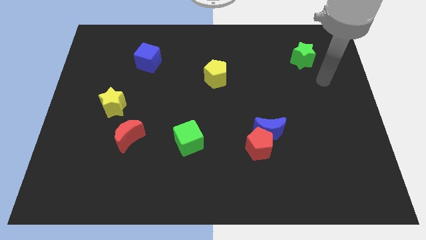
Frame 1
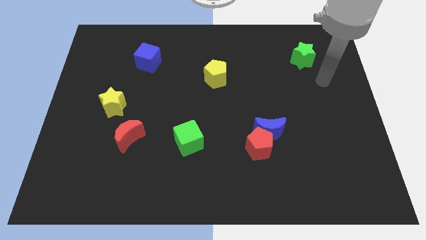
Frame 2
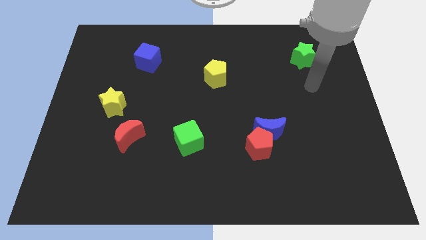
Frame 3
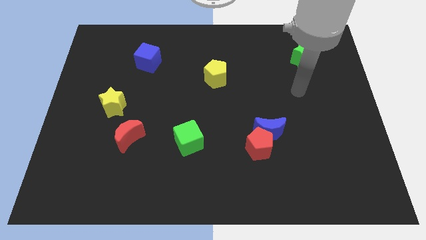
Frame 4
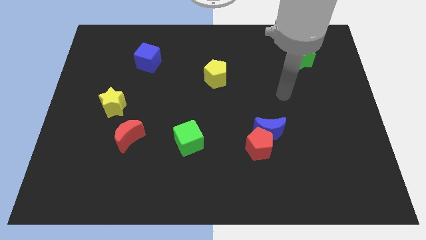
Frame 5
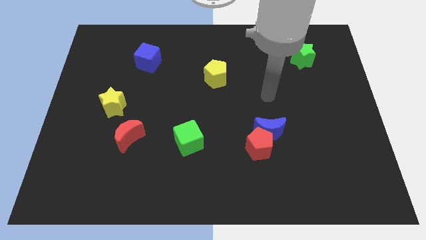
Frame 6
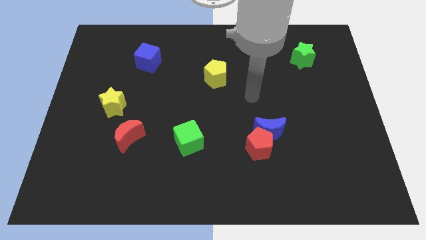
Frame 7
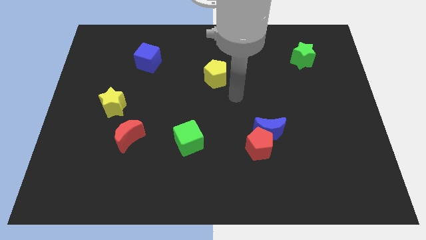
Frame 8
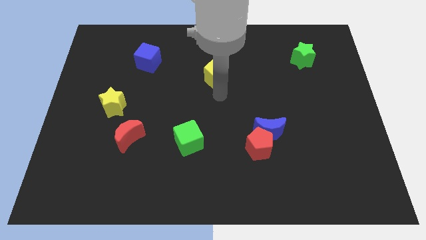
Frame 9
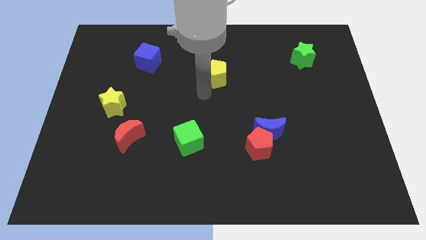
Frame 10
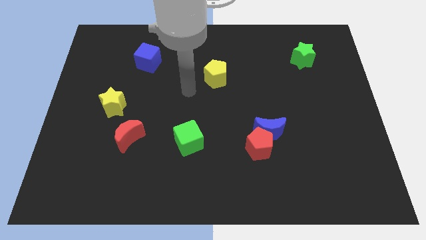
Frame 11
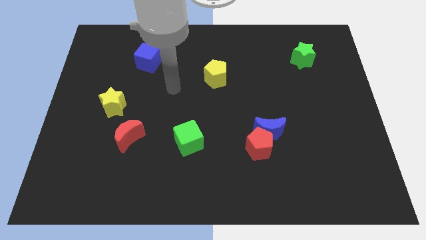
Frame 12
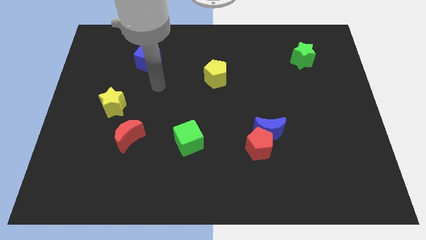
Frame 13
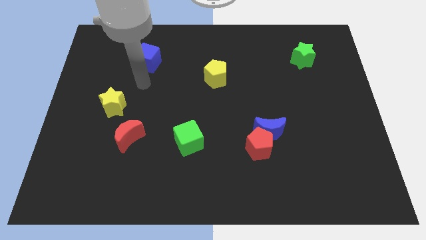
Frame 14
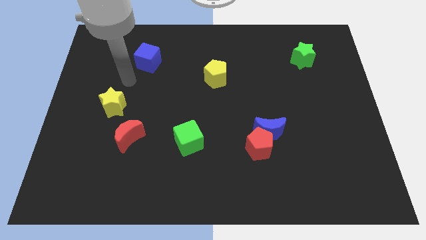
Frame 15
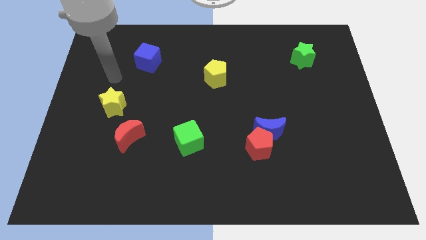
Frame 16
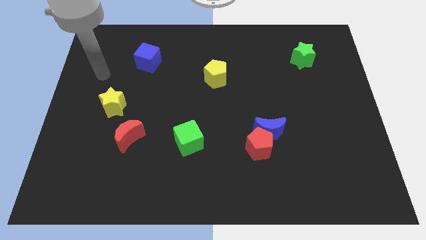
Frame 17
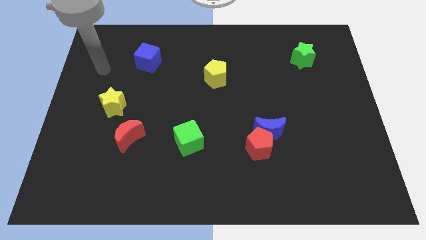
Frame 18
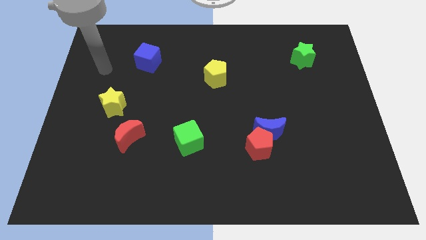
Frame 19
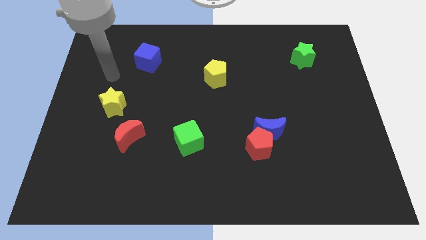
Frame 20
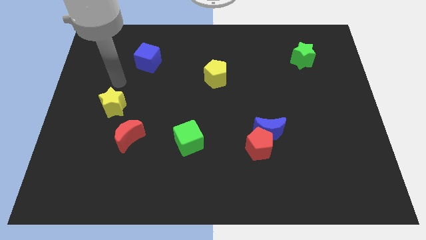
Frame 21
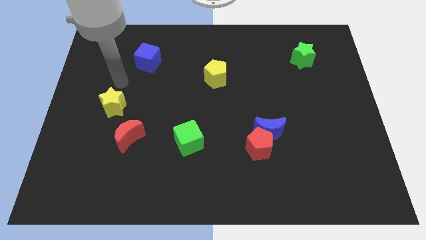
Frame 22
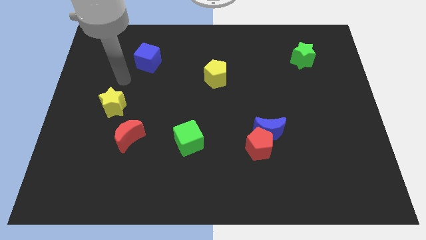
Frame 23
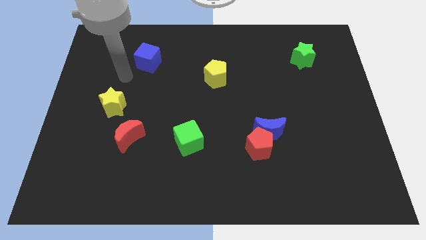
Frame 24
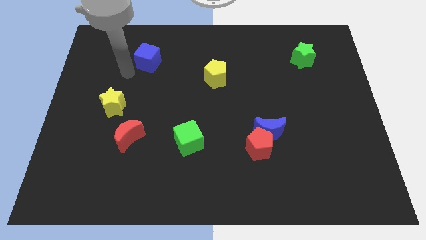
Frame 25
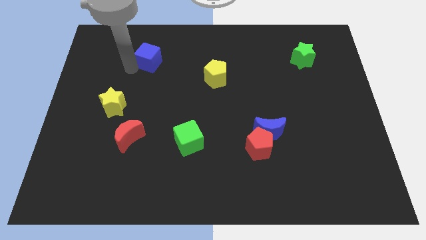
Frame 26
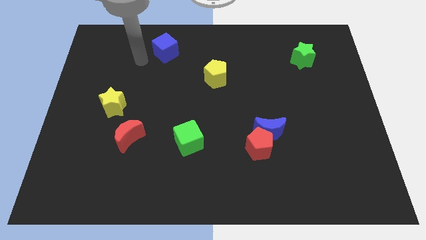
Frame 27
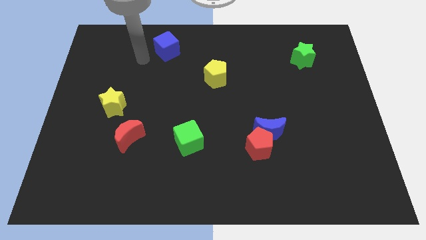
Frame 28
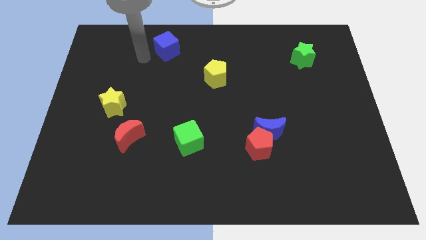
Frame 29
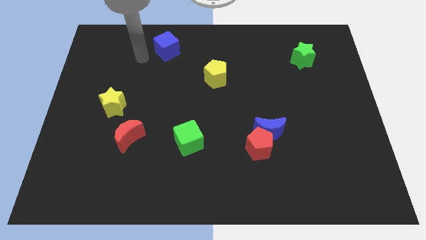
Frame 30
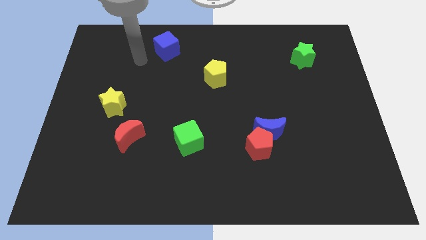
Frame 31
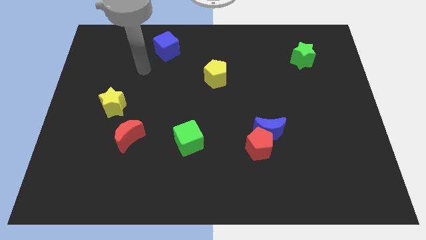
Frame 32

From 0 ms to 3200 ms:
push the blue cube towards the top side of the board

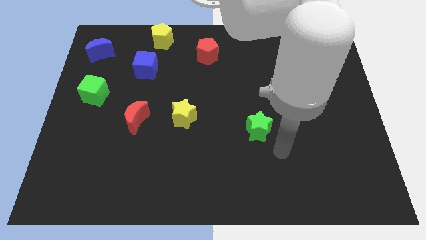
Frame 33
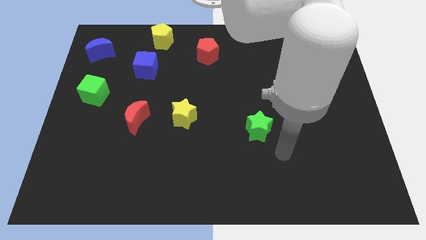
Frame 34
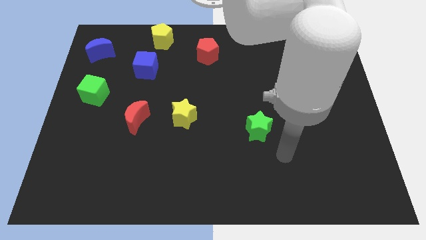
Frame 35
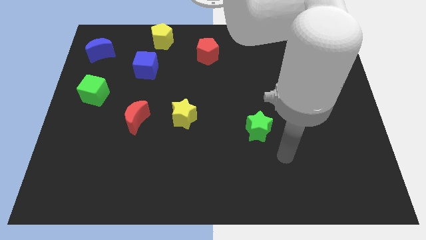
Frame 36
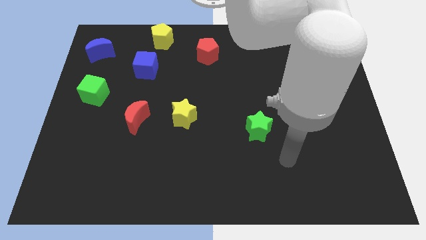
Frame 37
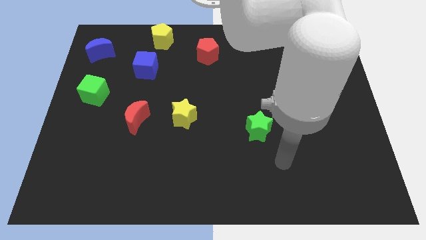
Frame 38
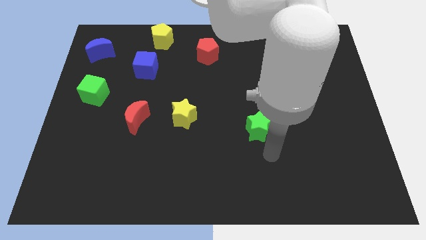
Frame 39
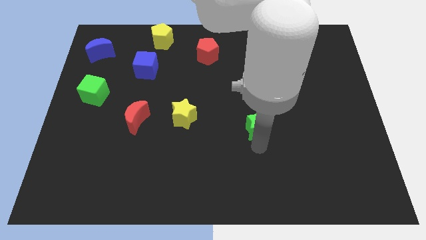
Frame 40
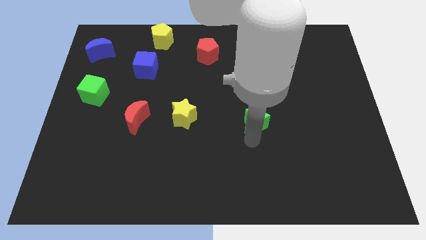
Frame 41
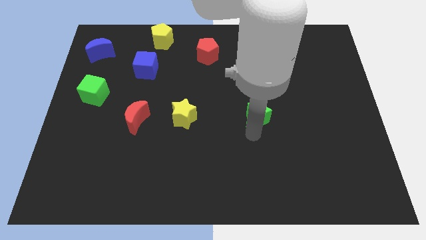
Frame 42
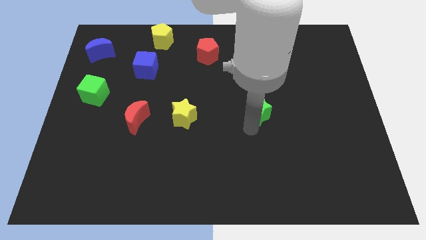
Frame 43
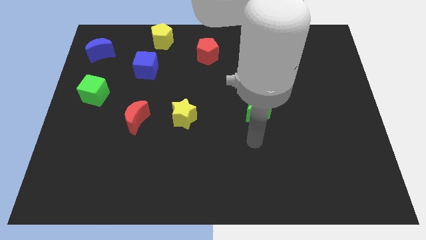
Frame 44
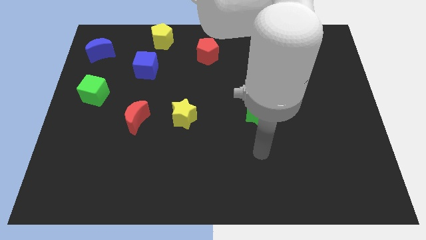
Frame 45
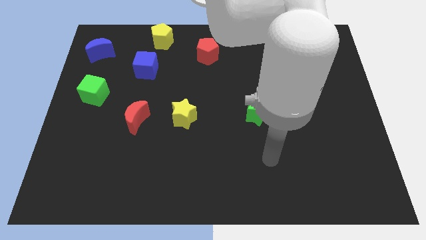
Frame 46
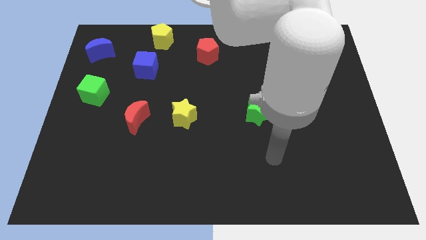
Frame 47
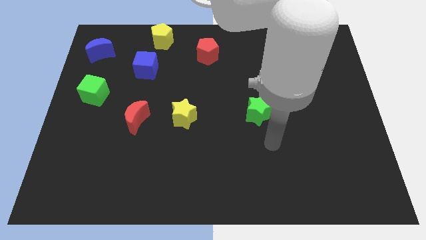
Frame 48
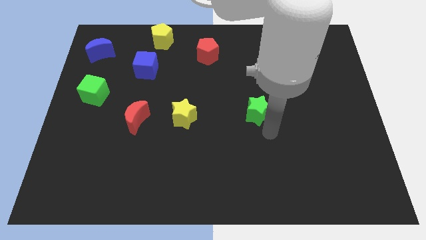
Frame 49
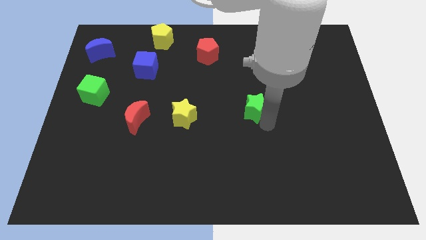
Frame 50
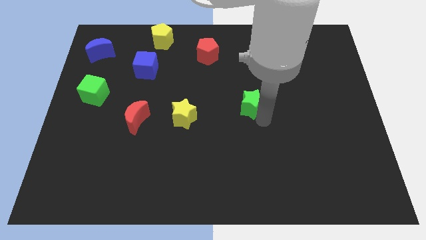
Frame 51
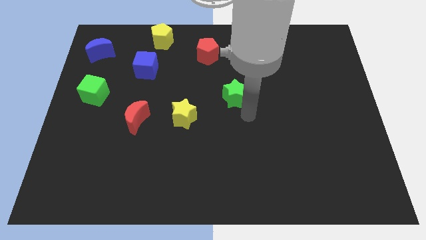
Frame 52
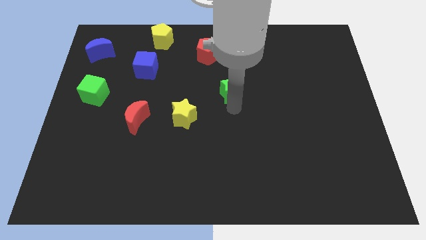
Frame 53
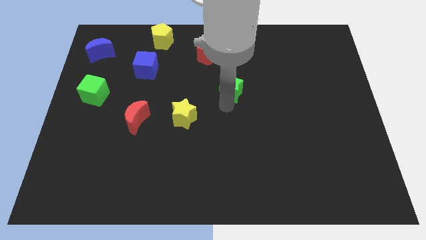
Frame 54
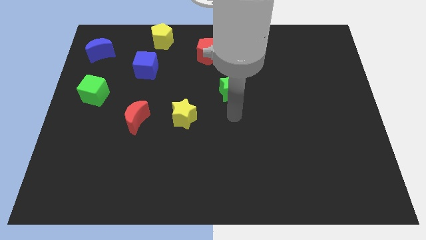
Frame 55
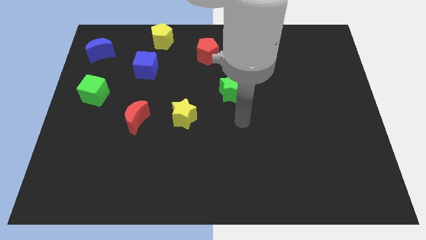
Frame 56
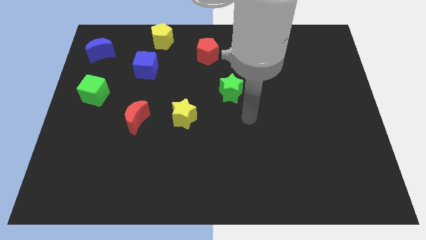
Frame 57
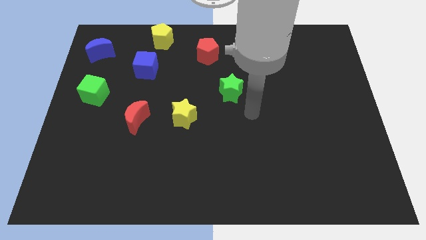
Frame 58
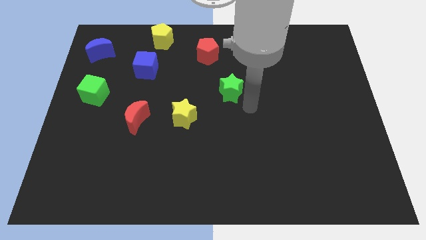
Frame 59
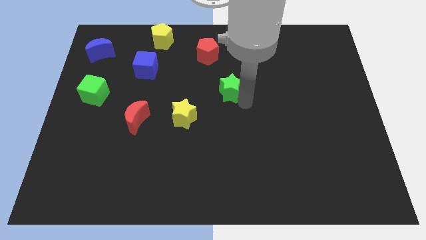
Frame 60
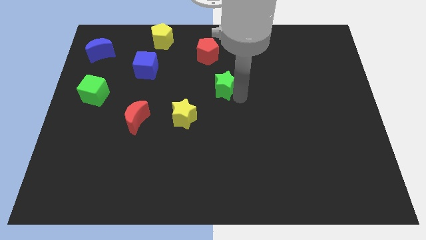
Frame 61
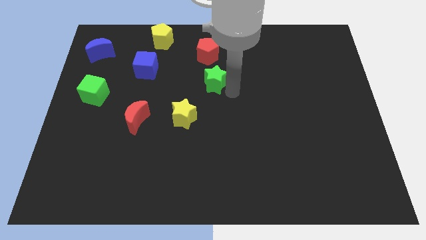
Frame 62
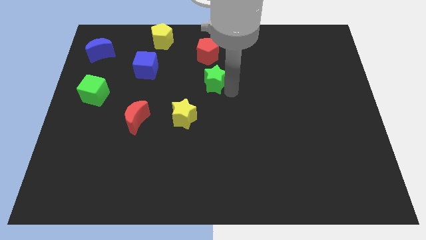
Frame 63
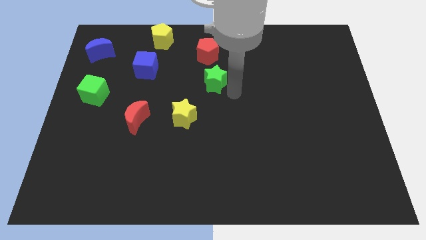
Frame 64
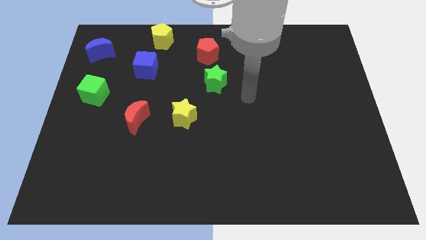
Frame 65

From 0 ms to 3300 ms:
place the green star bottom right to the red pentagon

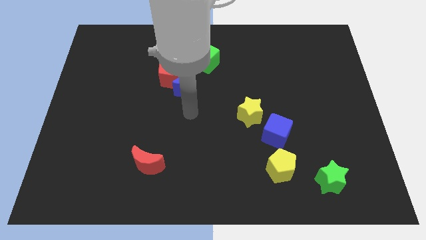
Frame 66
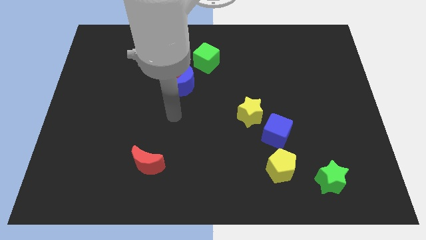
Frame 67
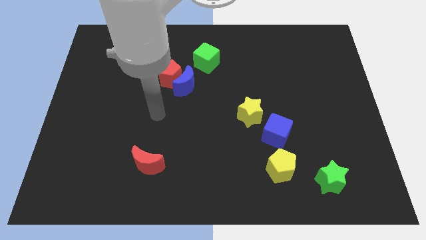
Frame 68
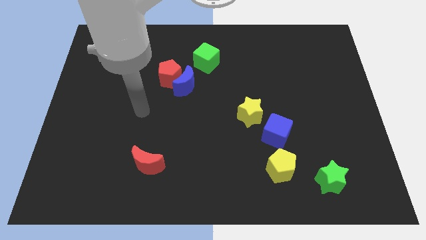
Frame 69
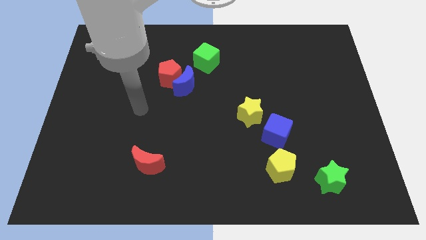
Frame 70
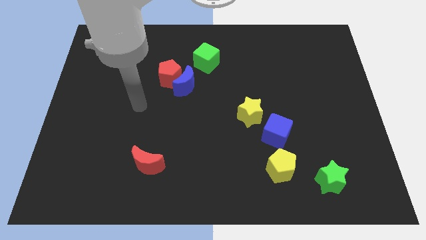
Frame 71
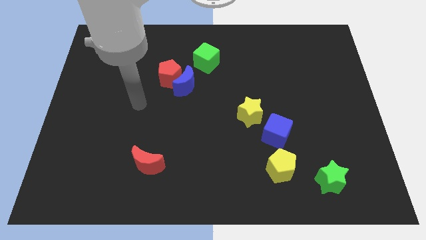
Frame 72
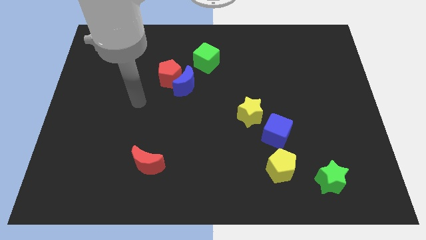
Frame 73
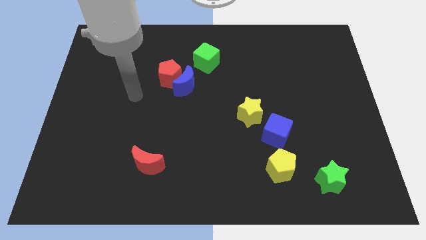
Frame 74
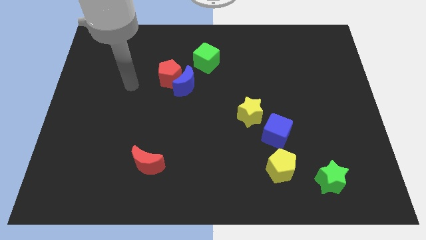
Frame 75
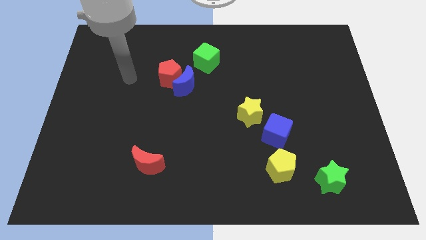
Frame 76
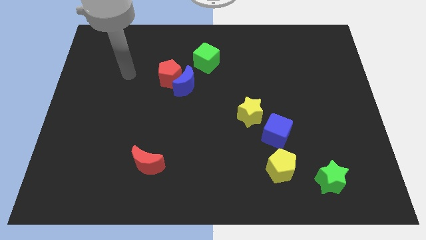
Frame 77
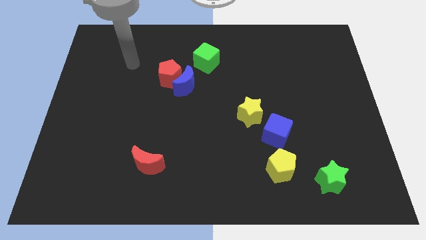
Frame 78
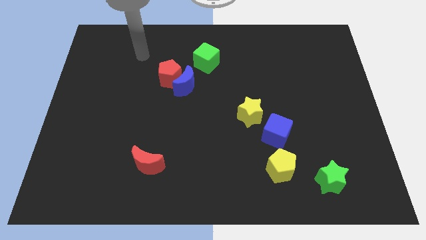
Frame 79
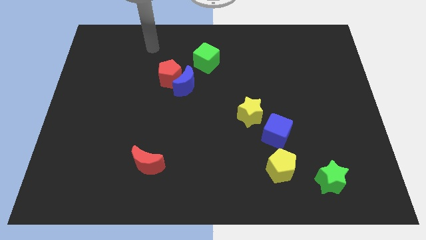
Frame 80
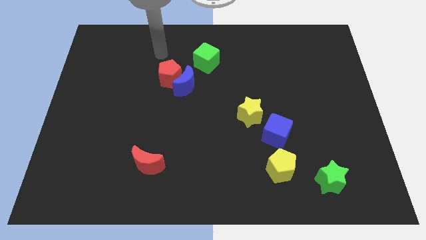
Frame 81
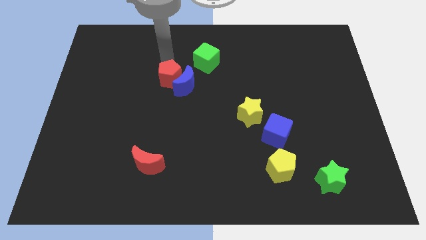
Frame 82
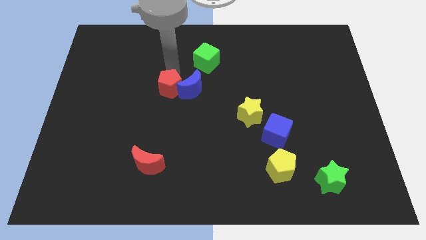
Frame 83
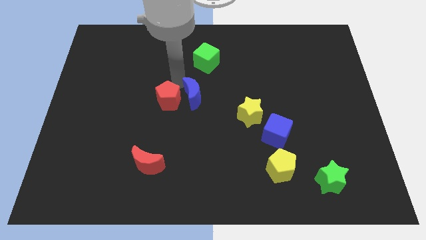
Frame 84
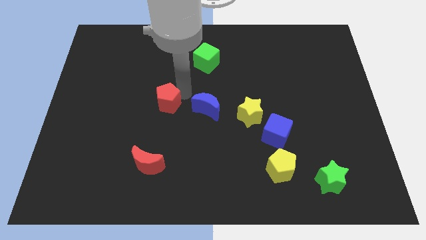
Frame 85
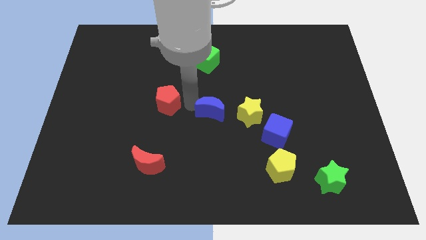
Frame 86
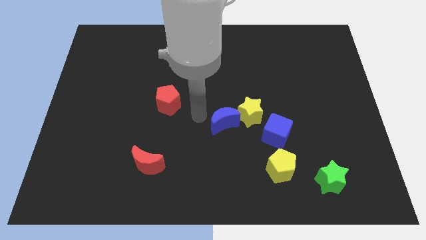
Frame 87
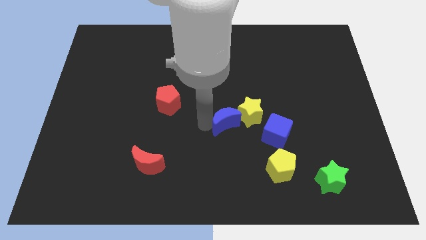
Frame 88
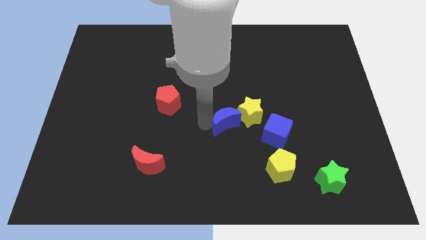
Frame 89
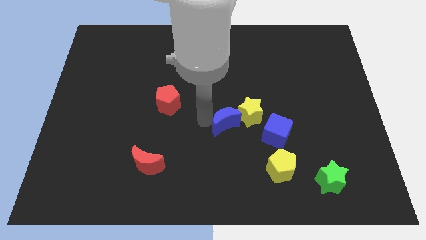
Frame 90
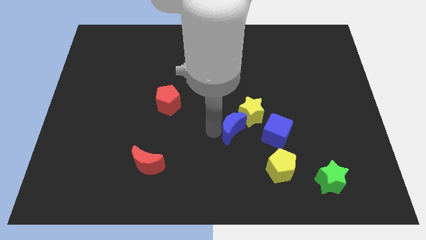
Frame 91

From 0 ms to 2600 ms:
place the blue moon beside the yellow star
